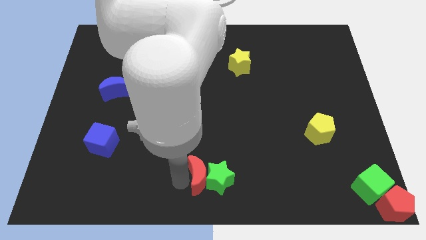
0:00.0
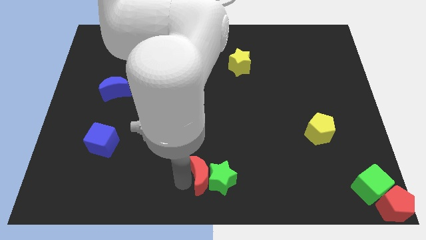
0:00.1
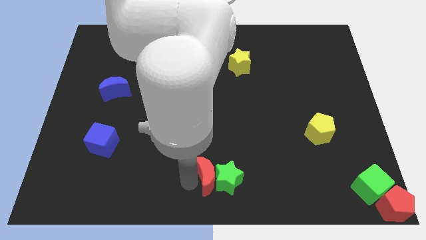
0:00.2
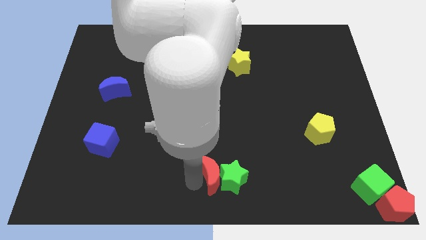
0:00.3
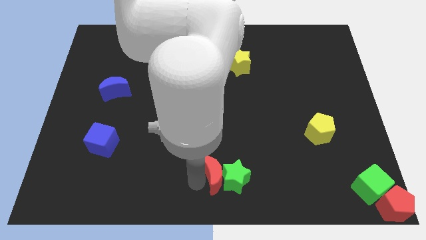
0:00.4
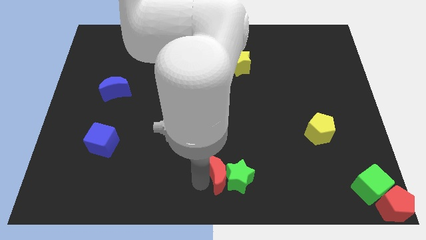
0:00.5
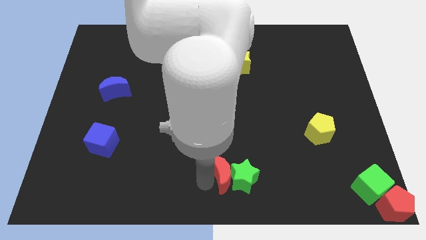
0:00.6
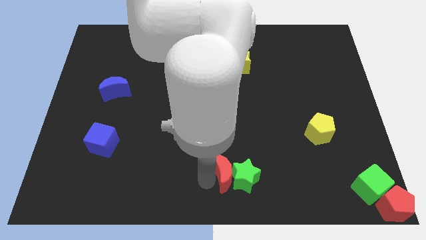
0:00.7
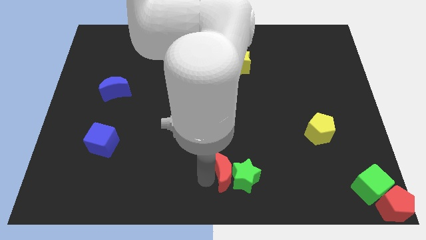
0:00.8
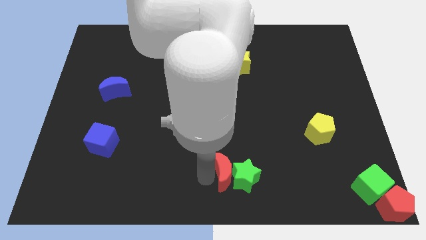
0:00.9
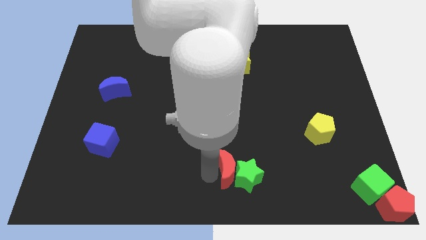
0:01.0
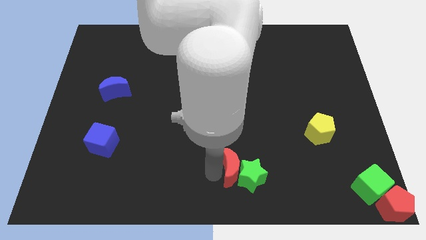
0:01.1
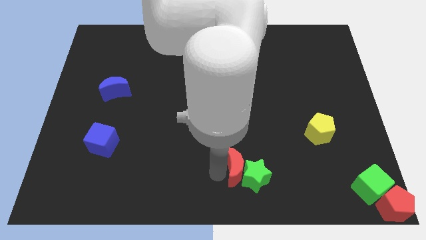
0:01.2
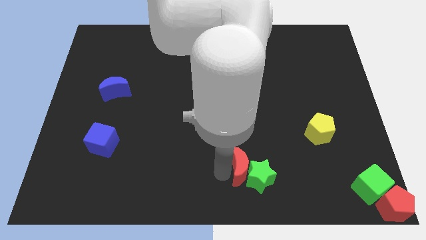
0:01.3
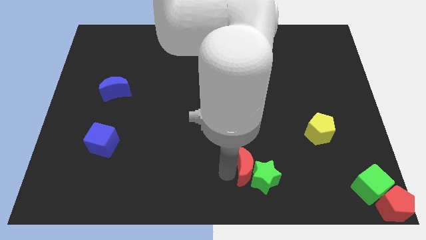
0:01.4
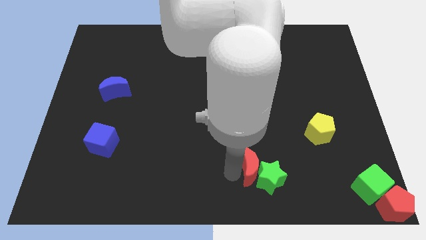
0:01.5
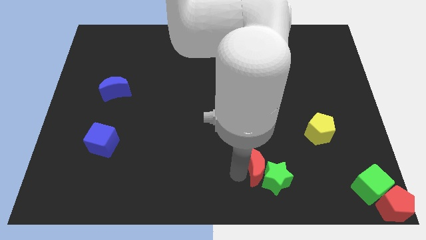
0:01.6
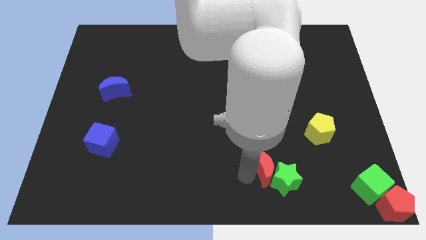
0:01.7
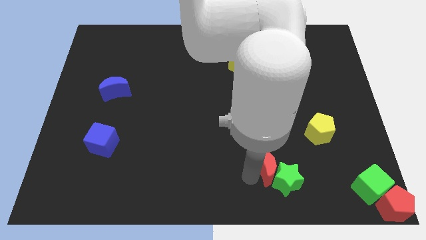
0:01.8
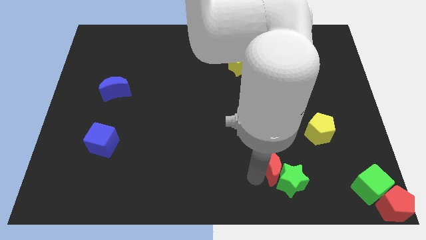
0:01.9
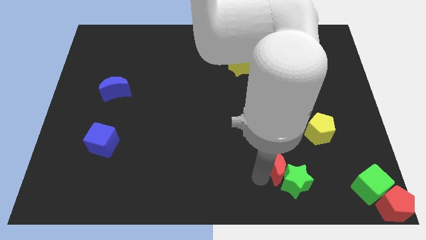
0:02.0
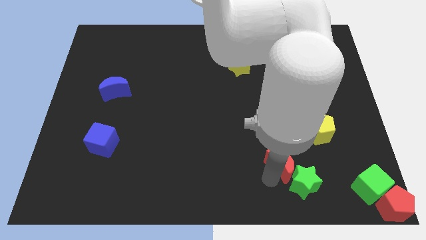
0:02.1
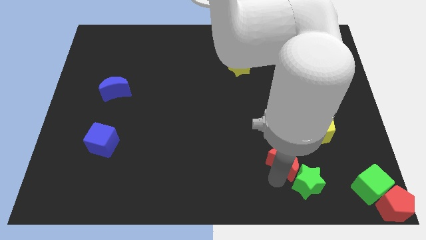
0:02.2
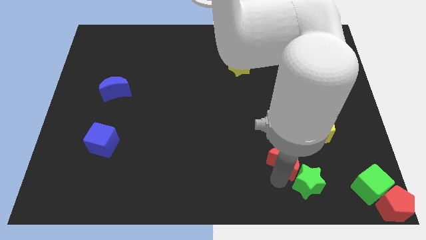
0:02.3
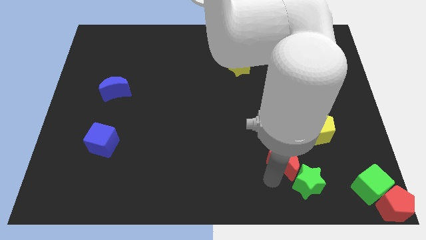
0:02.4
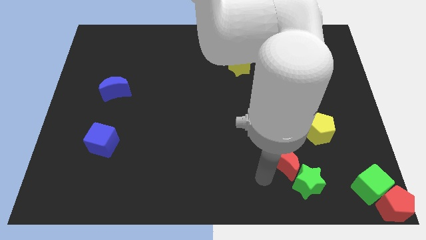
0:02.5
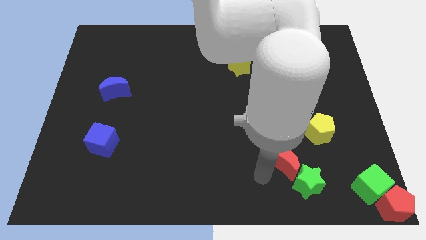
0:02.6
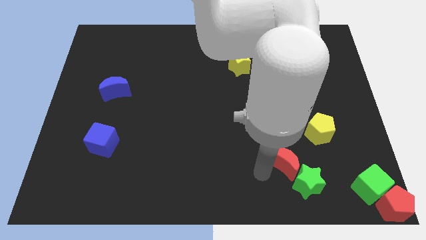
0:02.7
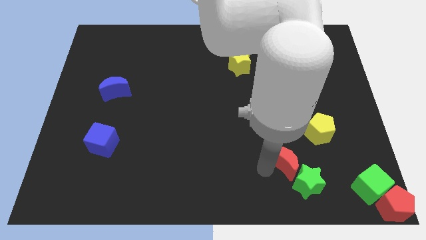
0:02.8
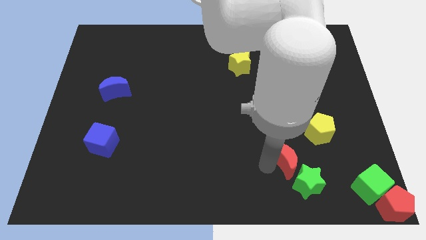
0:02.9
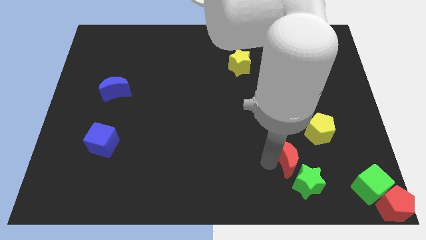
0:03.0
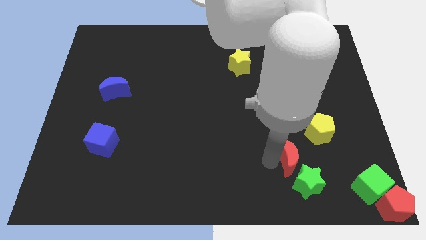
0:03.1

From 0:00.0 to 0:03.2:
move the green star and the red moon towards the bottom right

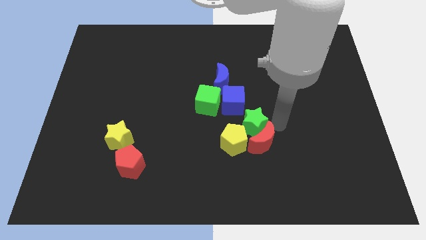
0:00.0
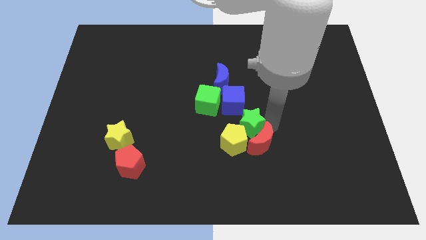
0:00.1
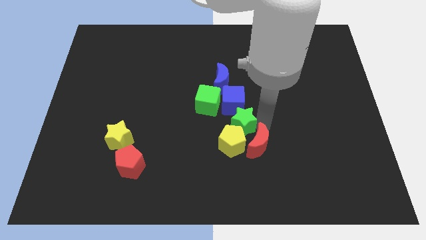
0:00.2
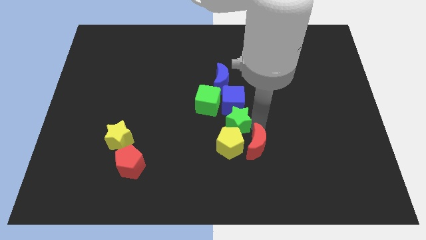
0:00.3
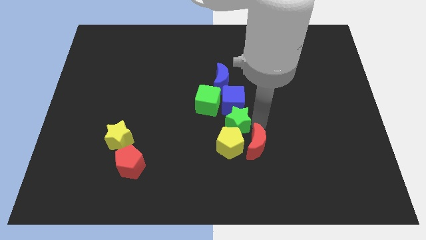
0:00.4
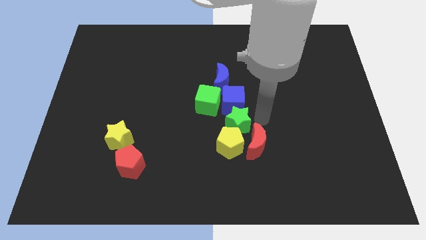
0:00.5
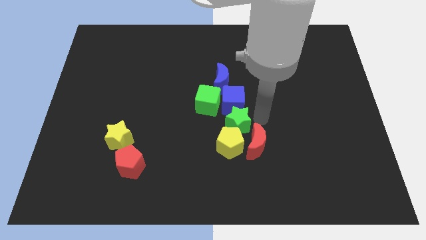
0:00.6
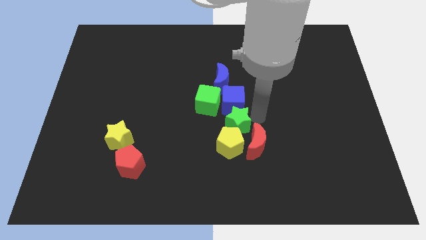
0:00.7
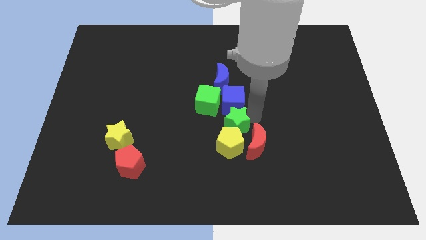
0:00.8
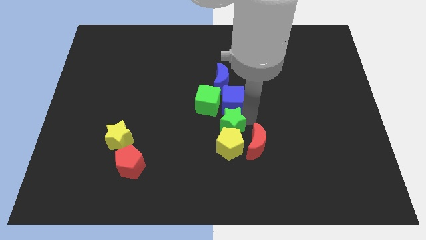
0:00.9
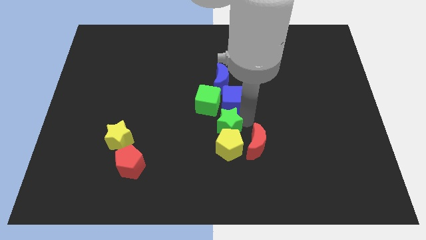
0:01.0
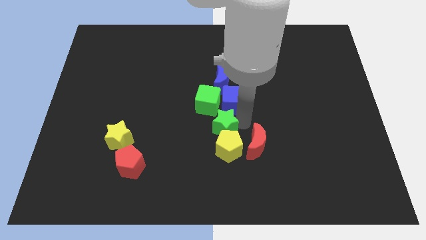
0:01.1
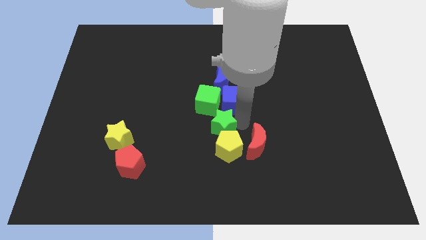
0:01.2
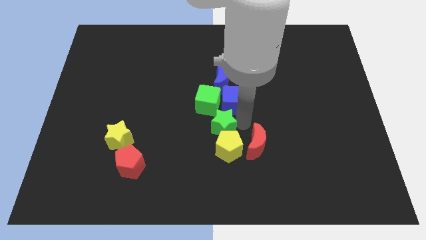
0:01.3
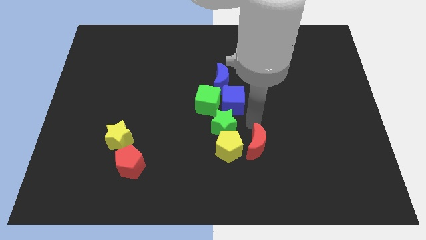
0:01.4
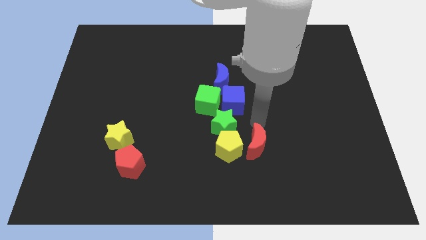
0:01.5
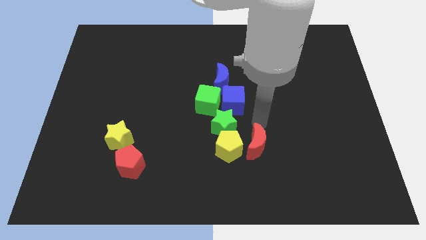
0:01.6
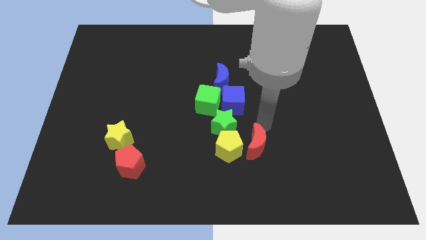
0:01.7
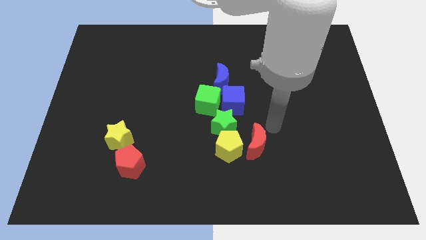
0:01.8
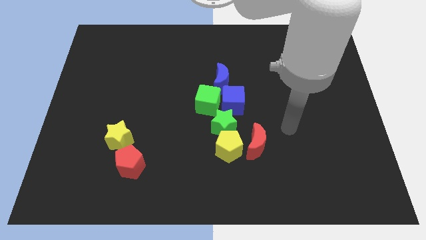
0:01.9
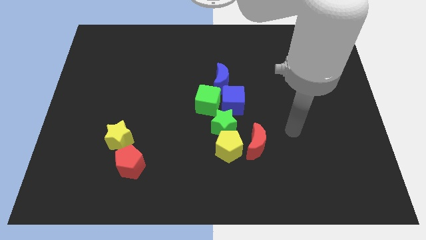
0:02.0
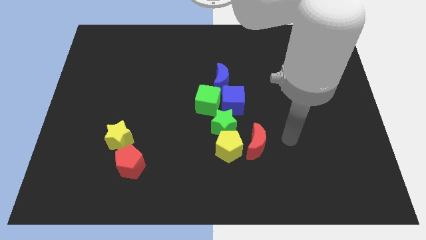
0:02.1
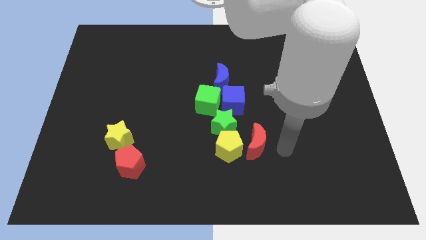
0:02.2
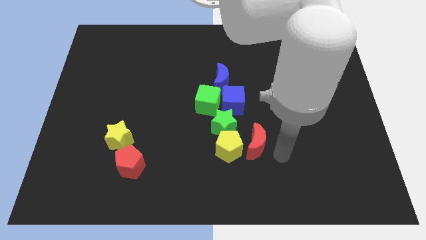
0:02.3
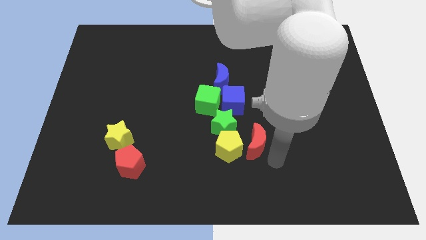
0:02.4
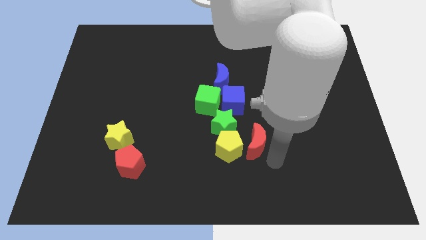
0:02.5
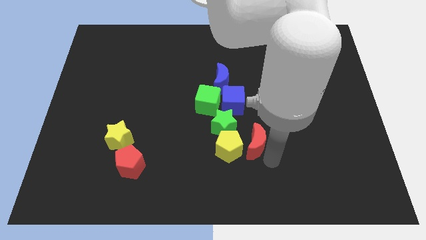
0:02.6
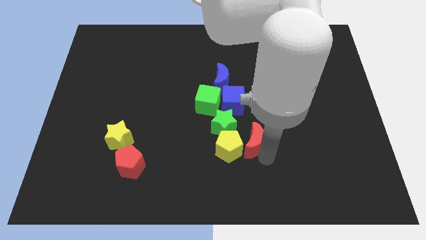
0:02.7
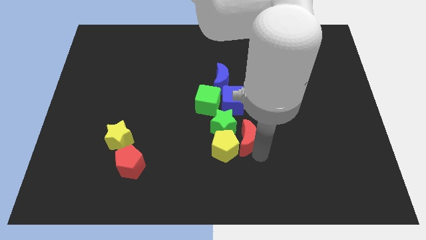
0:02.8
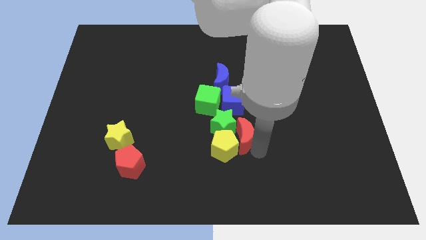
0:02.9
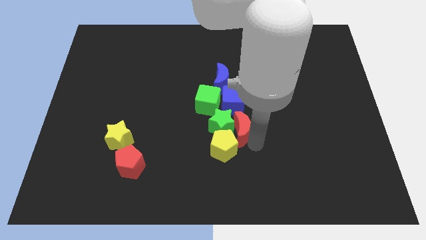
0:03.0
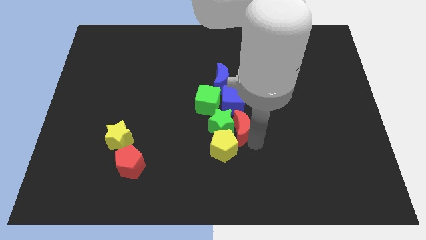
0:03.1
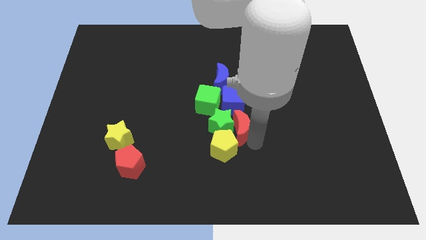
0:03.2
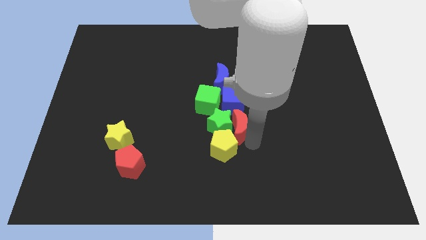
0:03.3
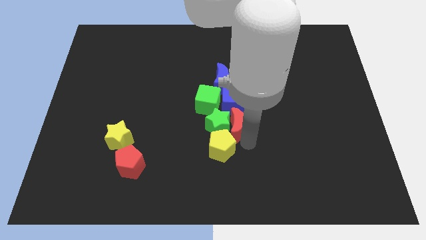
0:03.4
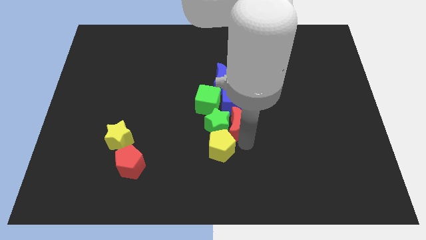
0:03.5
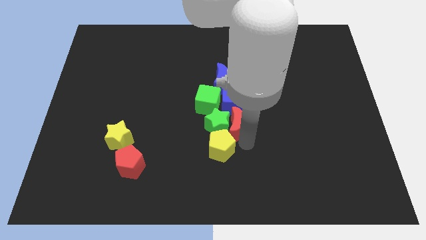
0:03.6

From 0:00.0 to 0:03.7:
place the green star below the green cube

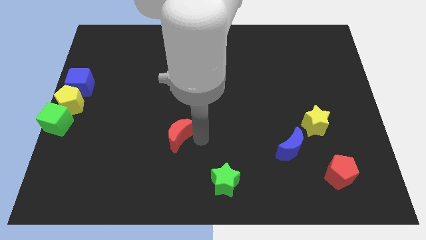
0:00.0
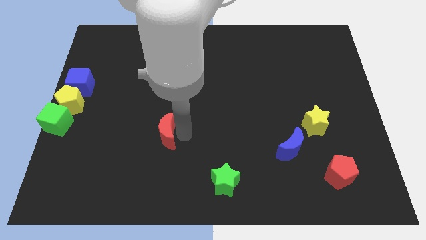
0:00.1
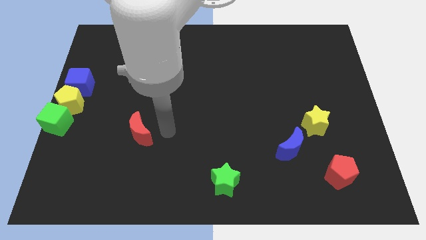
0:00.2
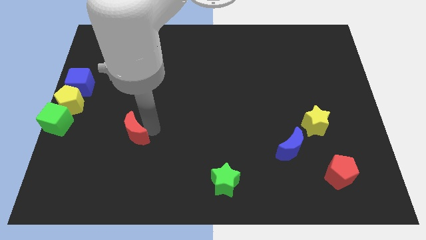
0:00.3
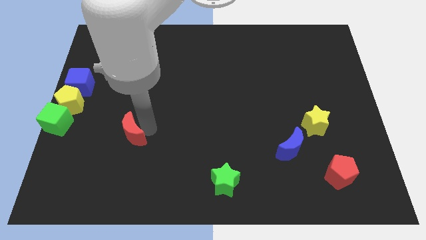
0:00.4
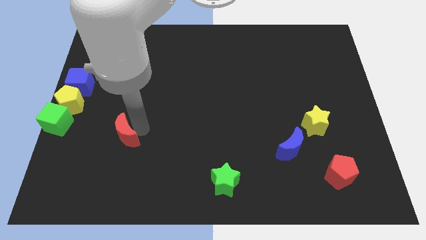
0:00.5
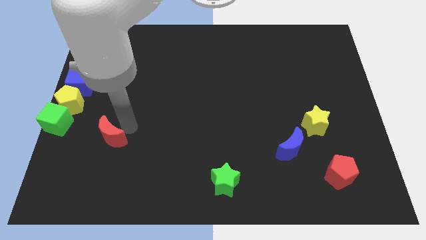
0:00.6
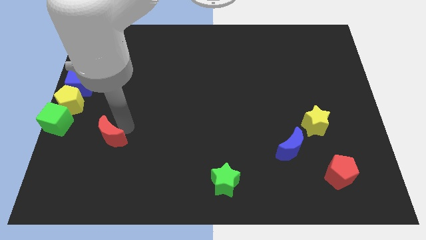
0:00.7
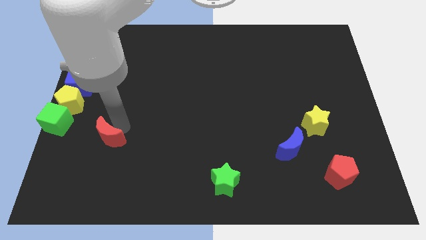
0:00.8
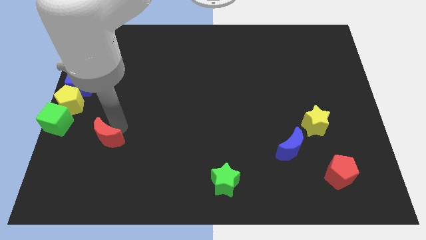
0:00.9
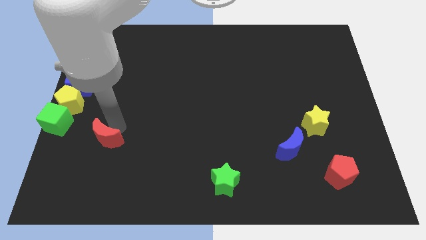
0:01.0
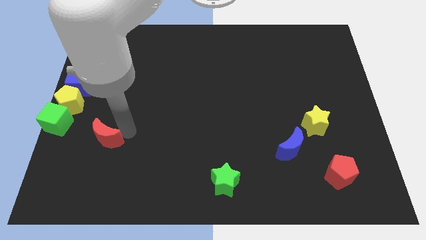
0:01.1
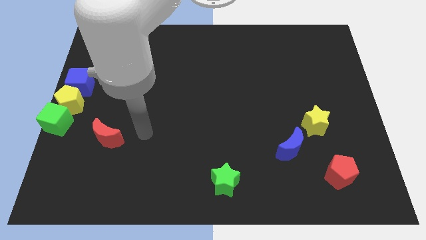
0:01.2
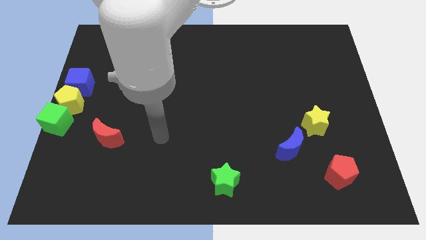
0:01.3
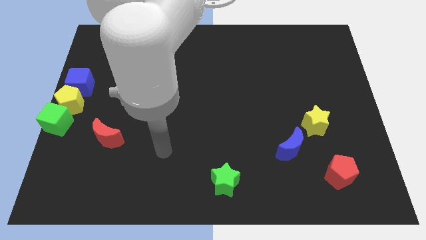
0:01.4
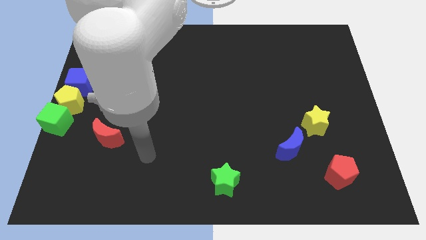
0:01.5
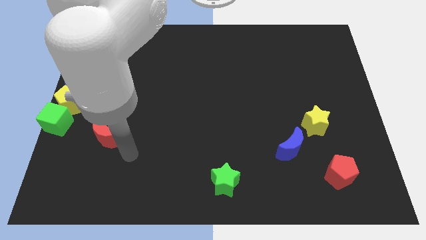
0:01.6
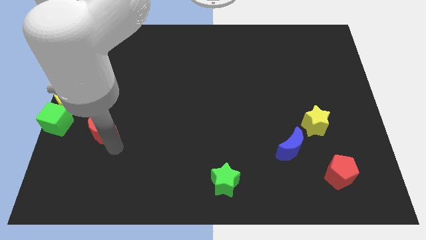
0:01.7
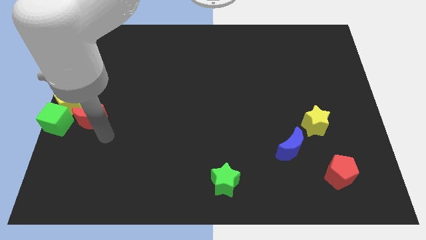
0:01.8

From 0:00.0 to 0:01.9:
drag the red moon towards the group of blocks

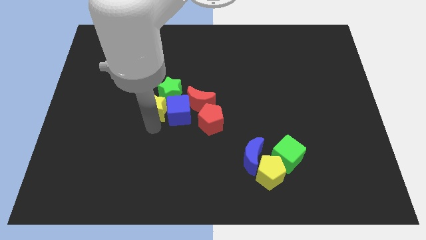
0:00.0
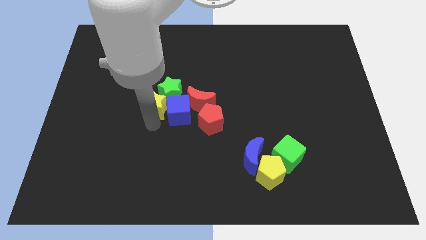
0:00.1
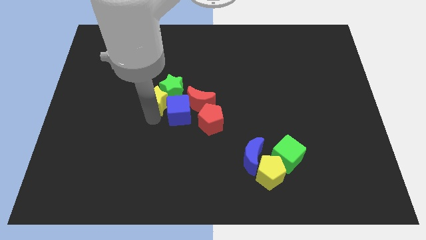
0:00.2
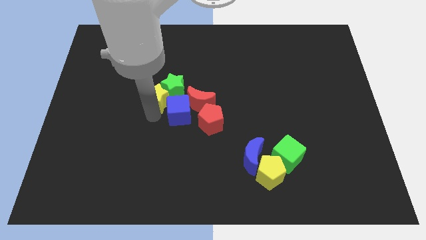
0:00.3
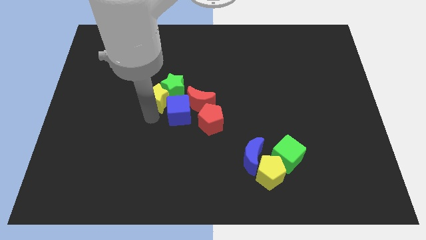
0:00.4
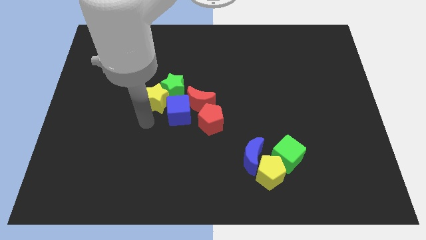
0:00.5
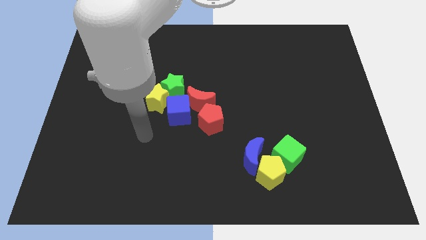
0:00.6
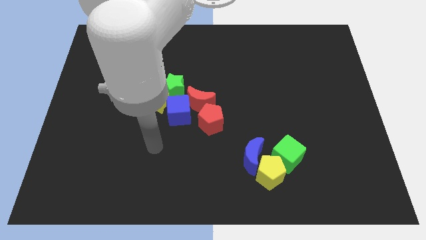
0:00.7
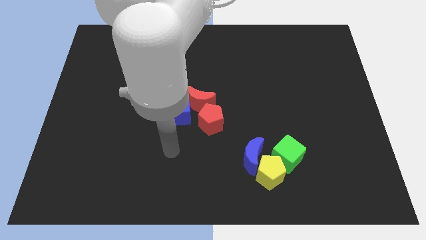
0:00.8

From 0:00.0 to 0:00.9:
push the yellow star into the green star
